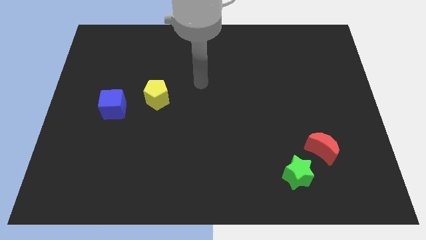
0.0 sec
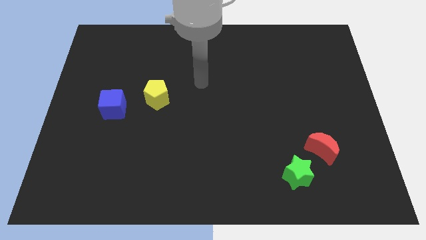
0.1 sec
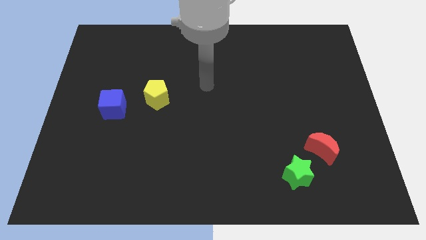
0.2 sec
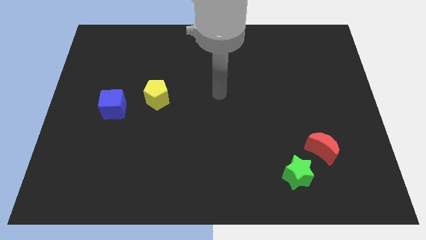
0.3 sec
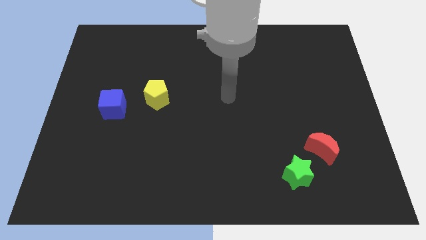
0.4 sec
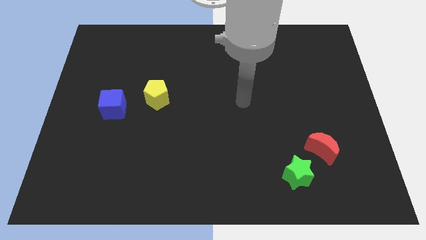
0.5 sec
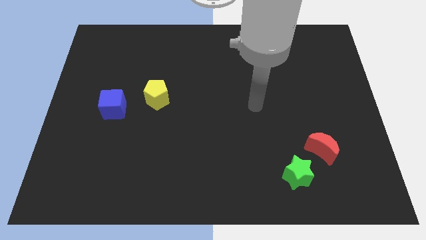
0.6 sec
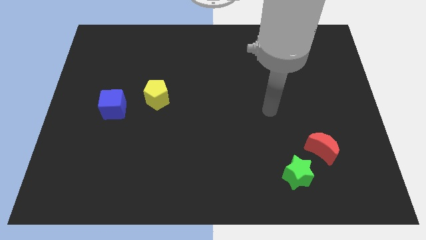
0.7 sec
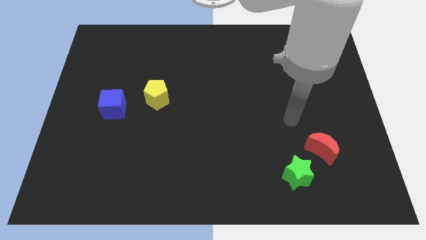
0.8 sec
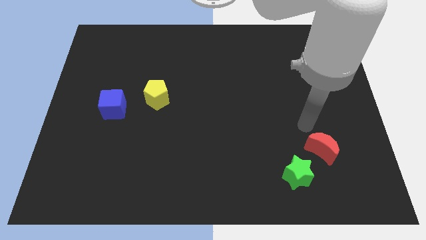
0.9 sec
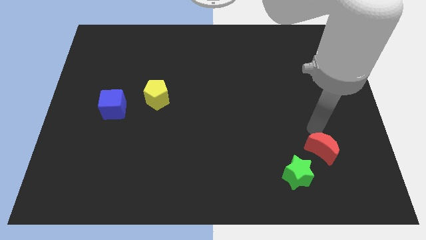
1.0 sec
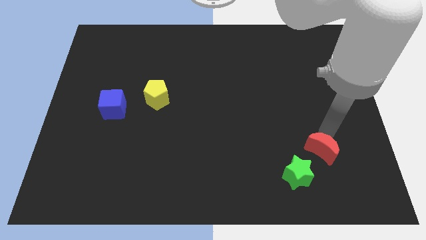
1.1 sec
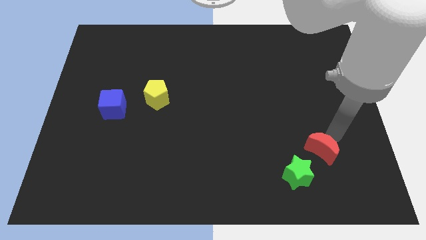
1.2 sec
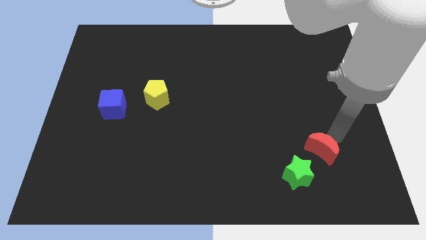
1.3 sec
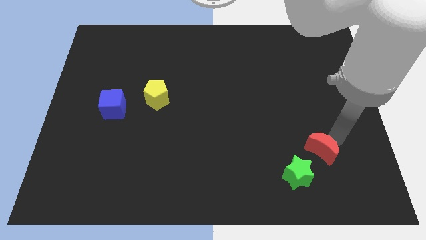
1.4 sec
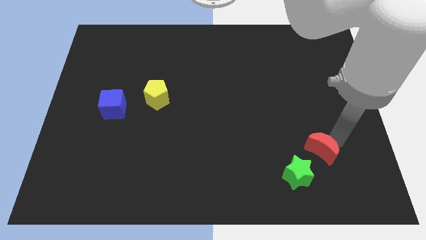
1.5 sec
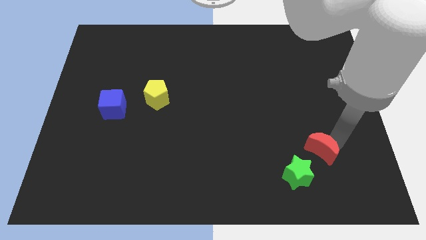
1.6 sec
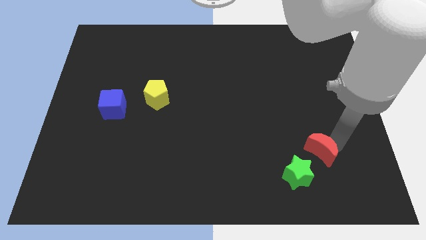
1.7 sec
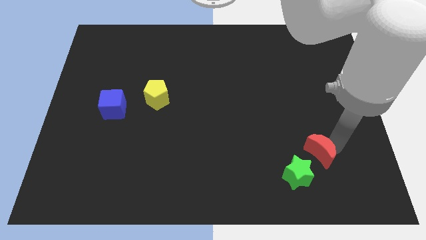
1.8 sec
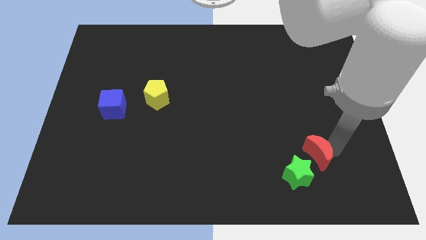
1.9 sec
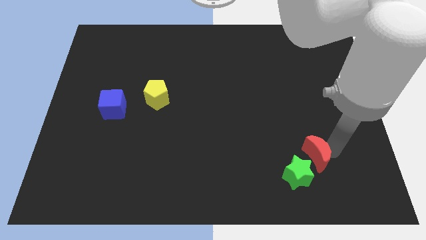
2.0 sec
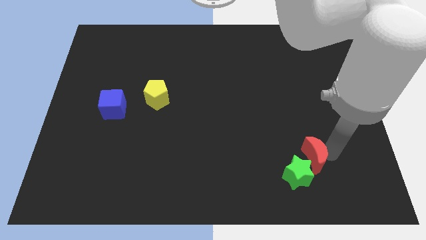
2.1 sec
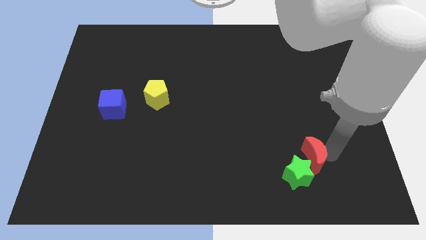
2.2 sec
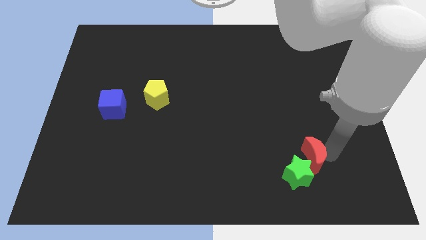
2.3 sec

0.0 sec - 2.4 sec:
push the red moon towards the star

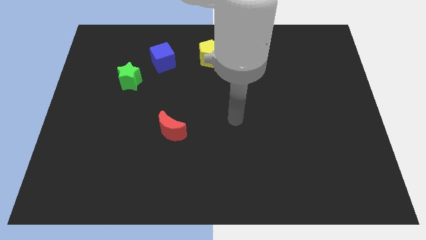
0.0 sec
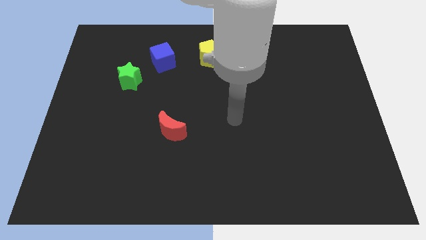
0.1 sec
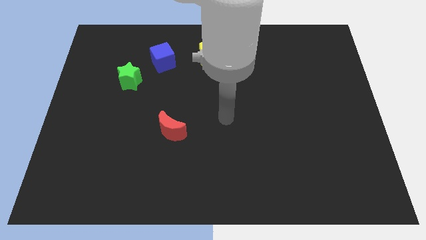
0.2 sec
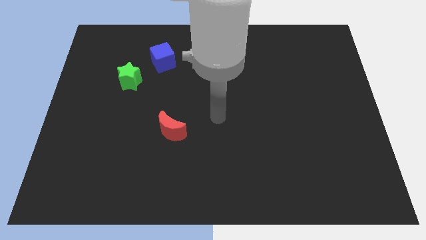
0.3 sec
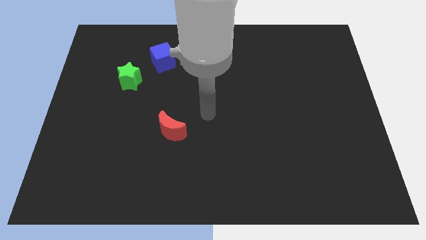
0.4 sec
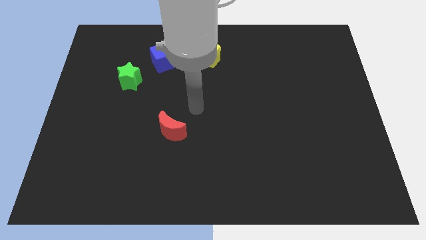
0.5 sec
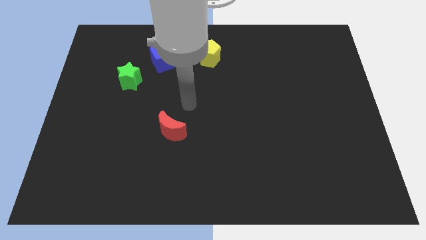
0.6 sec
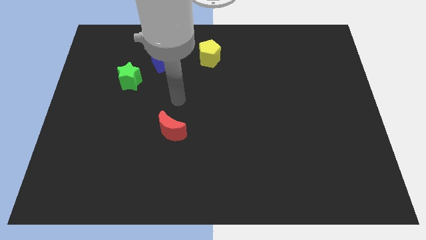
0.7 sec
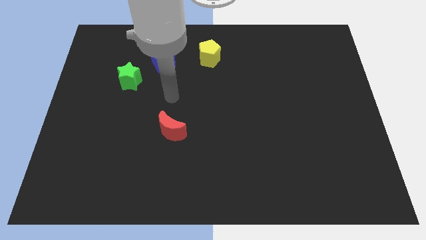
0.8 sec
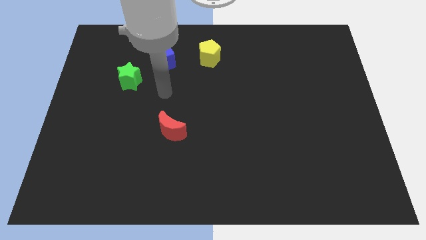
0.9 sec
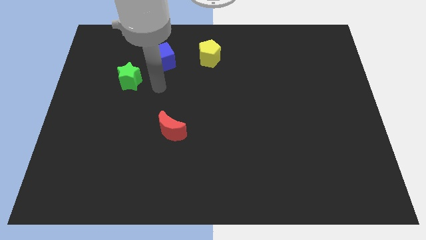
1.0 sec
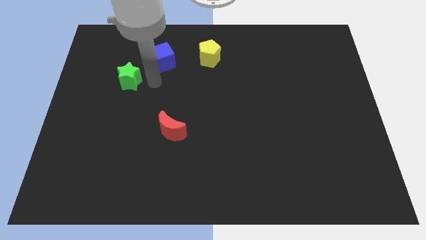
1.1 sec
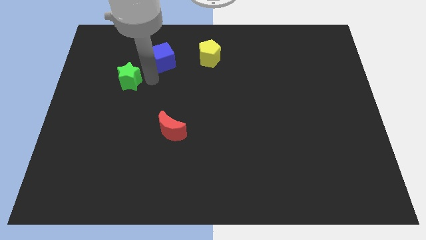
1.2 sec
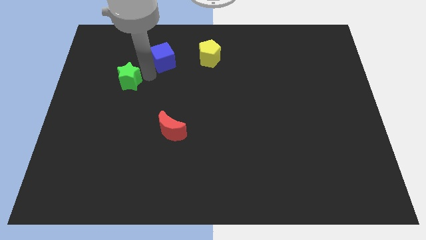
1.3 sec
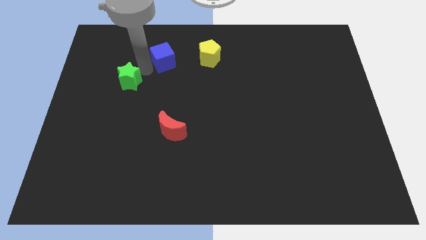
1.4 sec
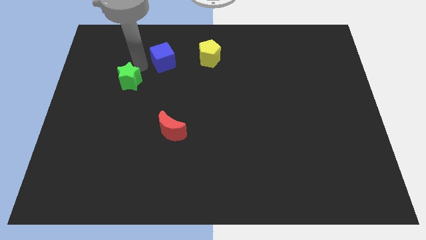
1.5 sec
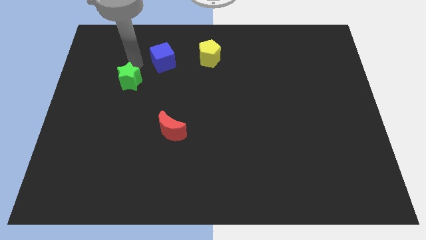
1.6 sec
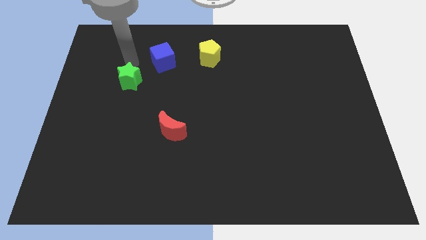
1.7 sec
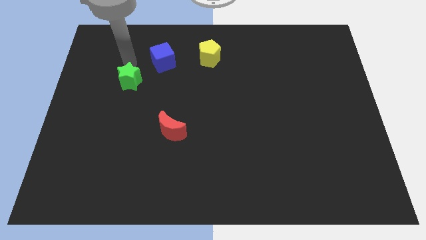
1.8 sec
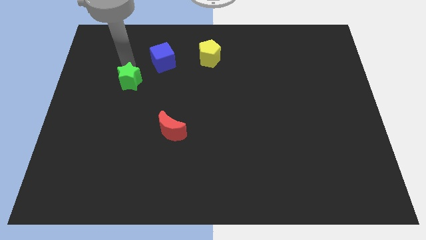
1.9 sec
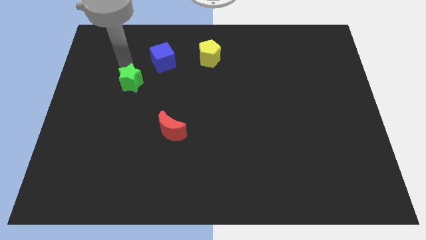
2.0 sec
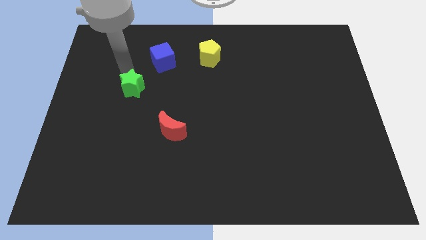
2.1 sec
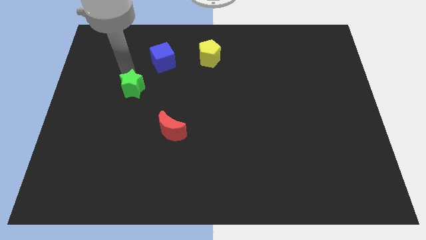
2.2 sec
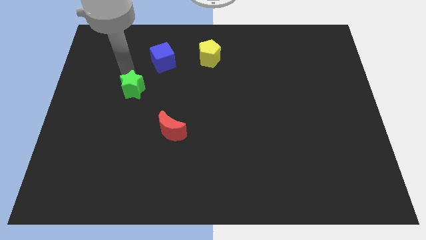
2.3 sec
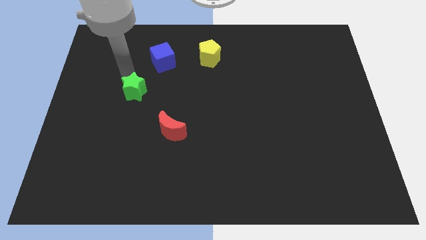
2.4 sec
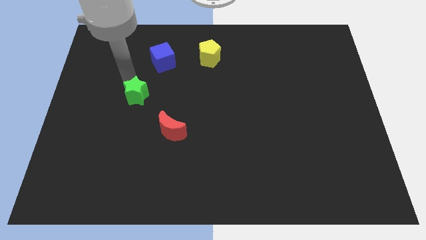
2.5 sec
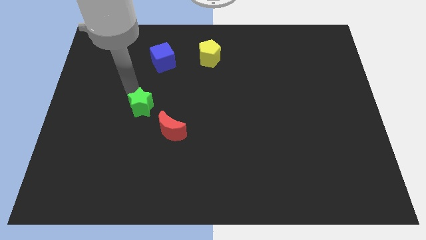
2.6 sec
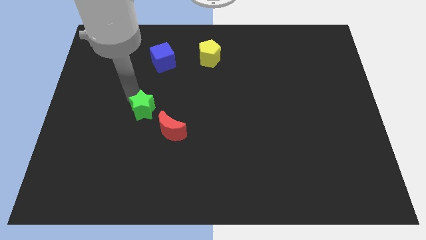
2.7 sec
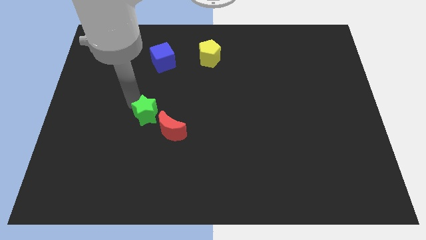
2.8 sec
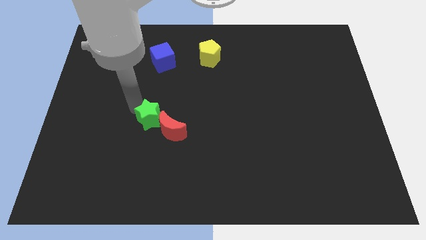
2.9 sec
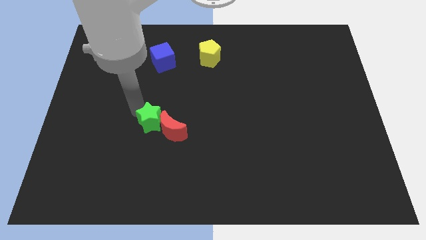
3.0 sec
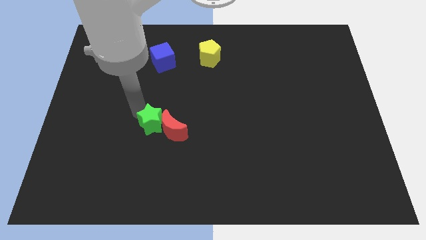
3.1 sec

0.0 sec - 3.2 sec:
push the star next to the moon

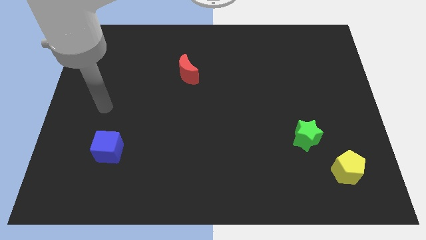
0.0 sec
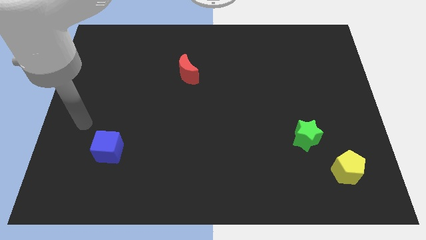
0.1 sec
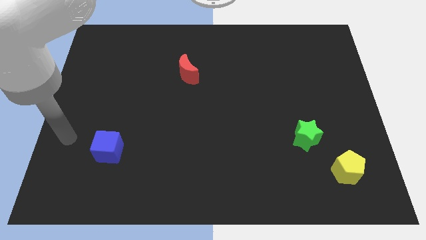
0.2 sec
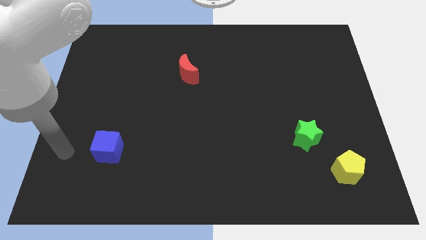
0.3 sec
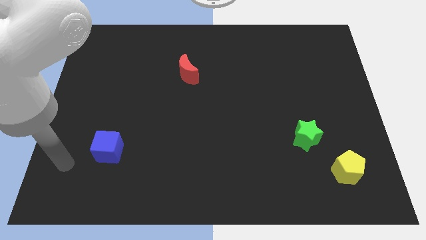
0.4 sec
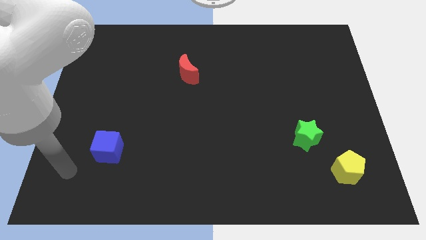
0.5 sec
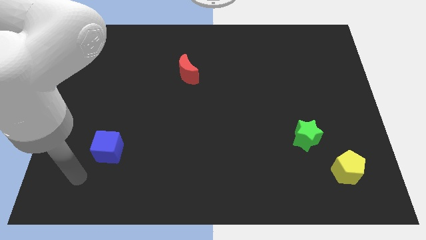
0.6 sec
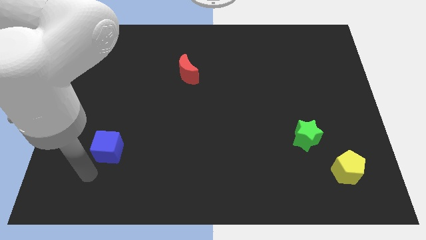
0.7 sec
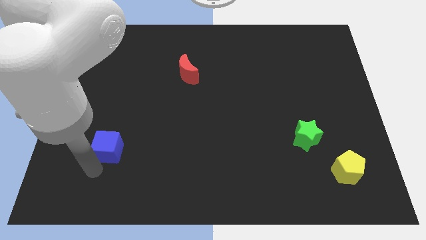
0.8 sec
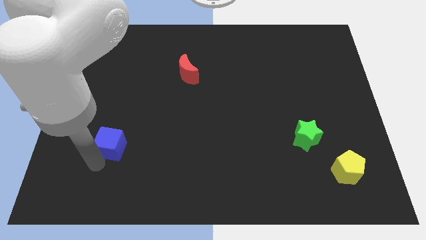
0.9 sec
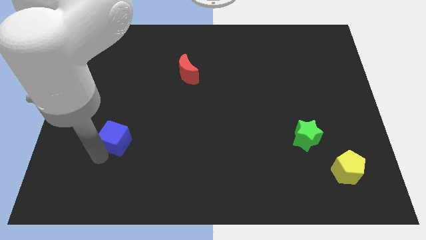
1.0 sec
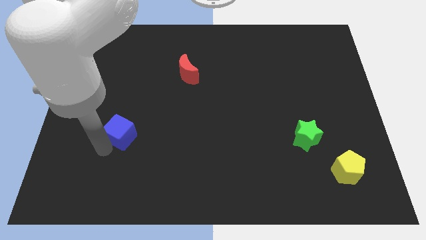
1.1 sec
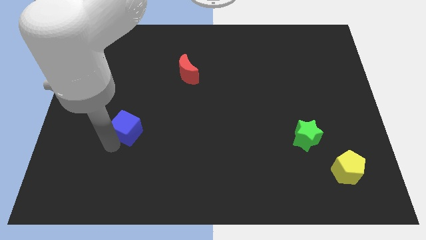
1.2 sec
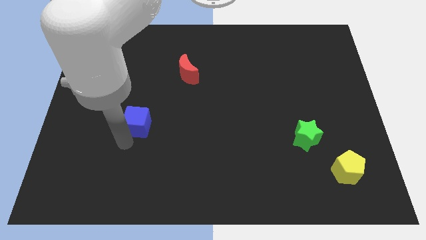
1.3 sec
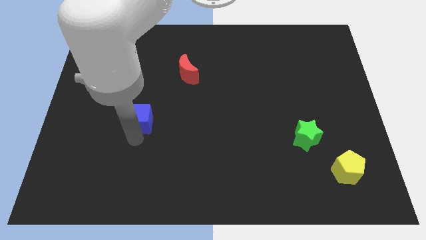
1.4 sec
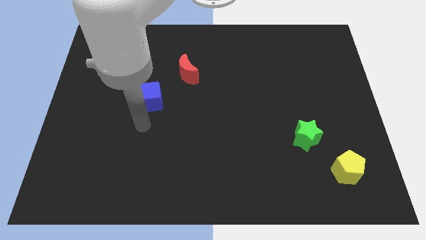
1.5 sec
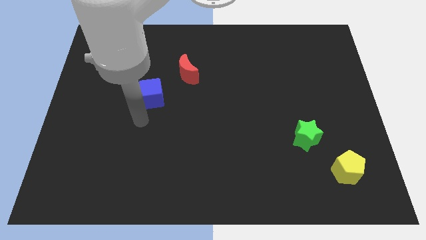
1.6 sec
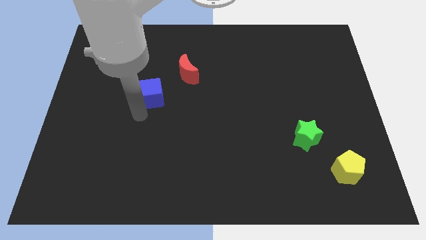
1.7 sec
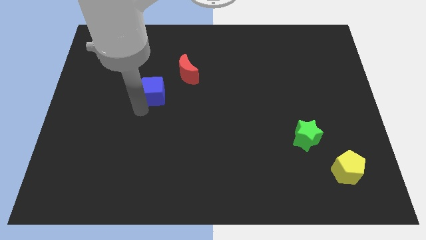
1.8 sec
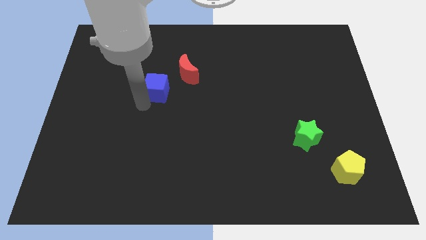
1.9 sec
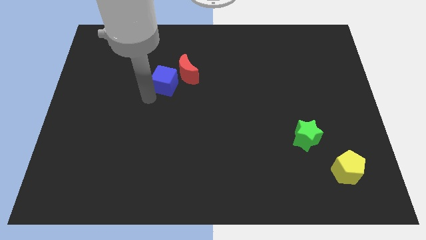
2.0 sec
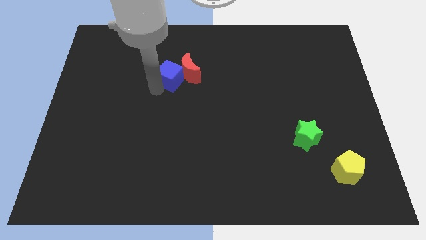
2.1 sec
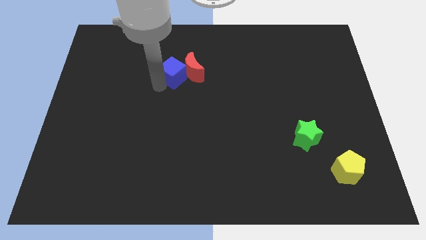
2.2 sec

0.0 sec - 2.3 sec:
move the blue block next to the moon

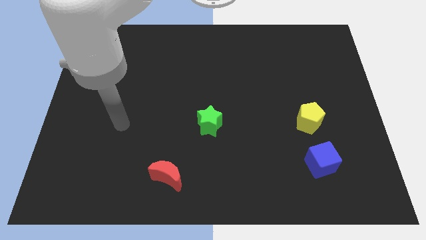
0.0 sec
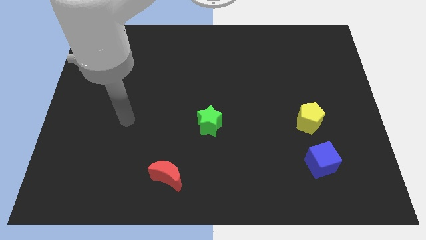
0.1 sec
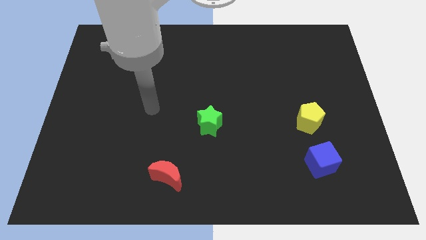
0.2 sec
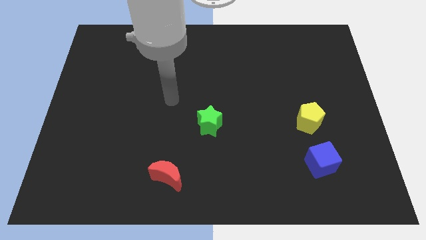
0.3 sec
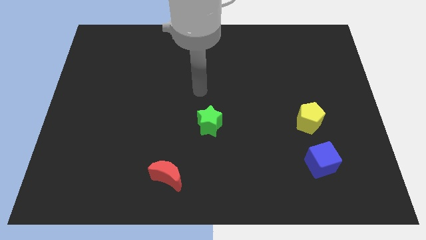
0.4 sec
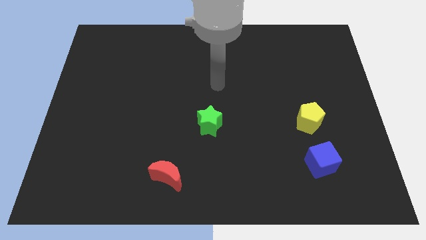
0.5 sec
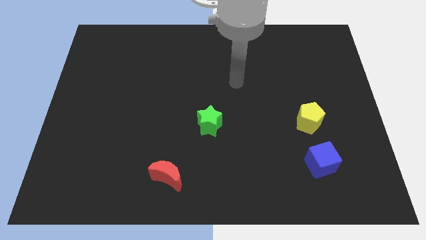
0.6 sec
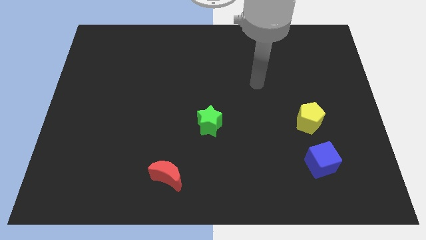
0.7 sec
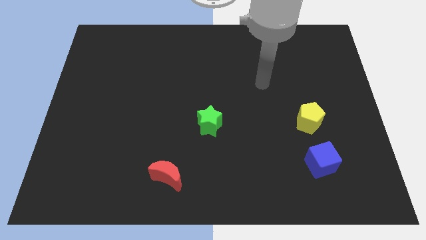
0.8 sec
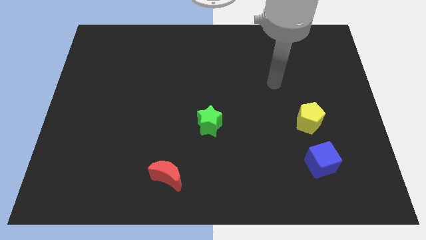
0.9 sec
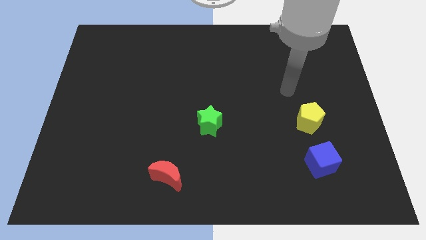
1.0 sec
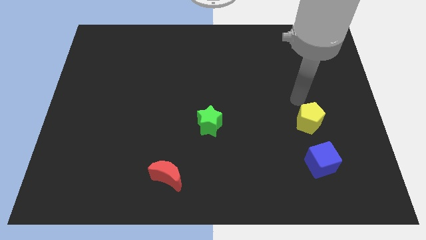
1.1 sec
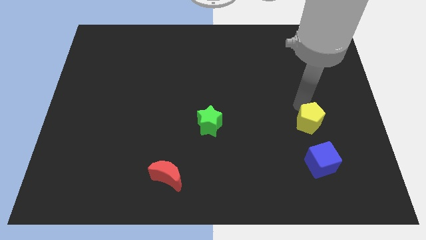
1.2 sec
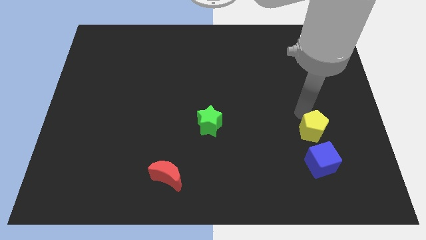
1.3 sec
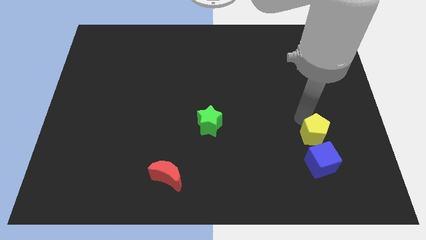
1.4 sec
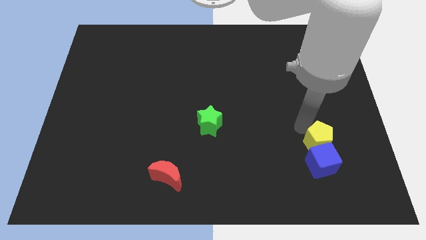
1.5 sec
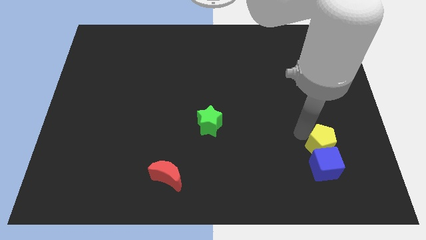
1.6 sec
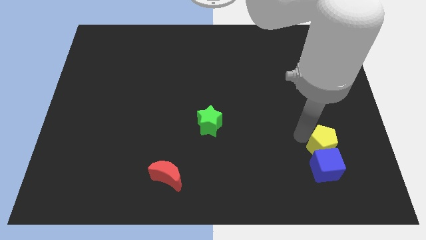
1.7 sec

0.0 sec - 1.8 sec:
push the yellow pentagon next to the blue block
